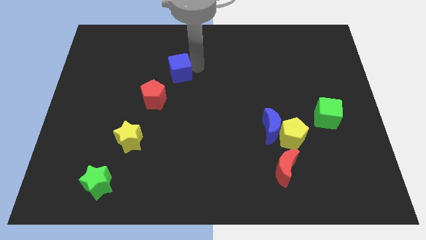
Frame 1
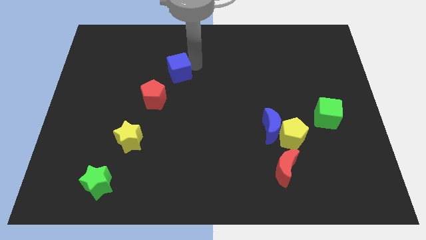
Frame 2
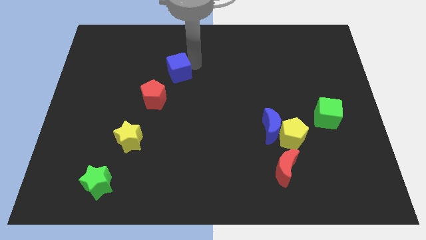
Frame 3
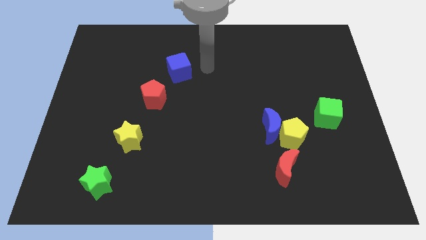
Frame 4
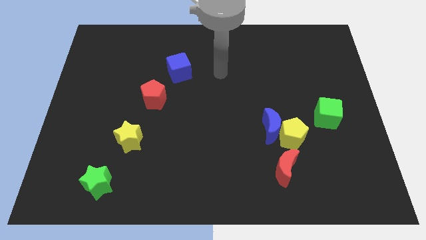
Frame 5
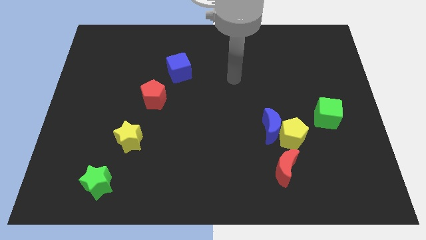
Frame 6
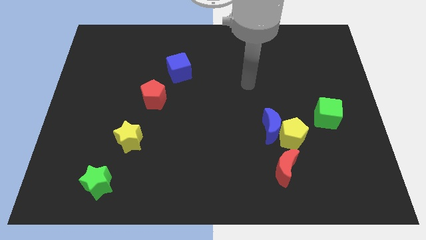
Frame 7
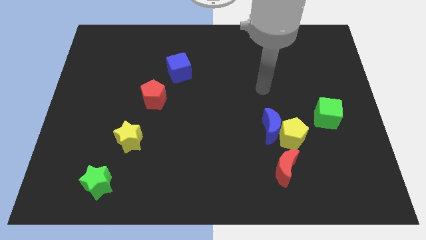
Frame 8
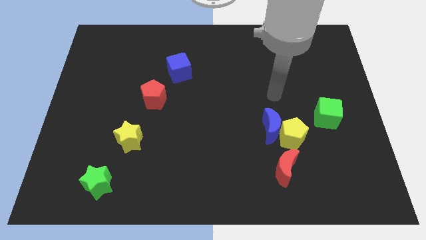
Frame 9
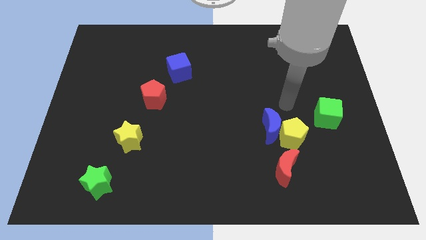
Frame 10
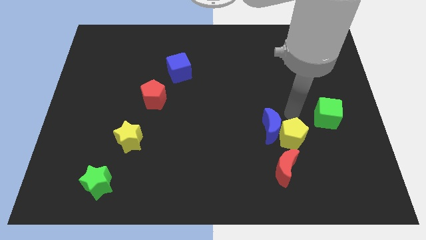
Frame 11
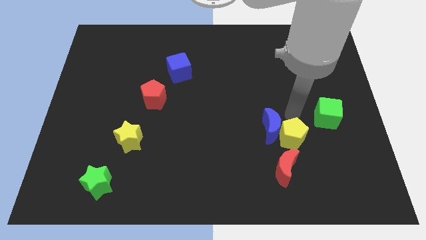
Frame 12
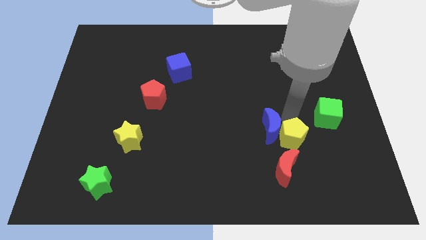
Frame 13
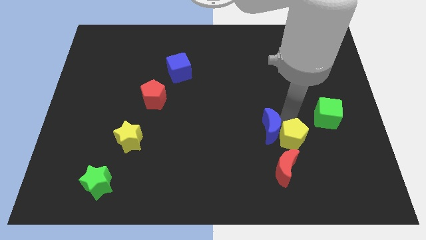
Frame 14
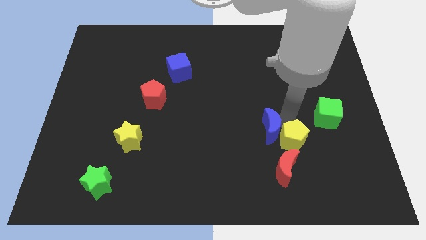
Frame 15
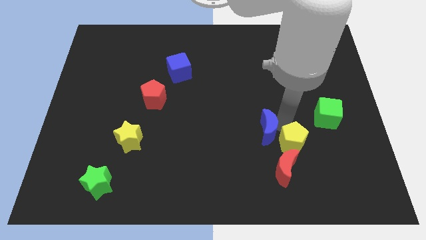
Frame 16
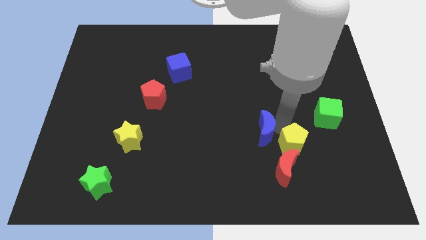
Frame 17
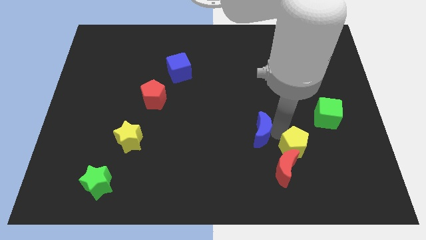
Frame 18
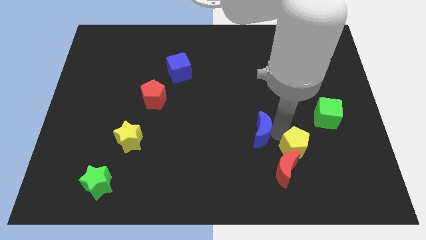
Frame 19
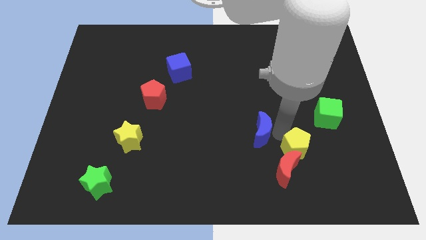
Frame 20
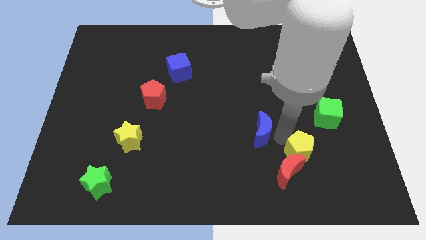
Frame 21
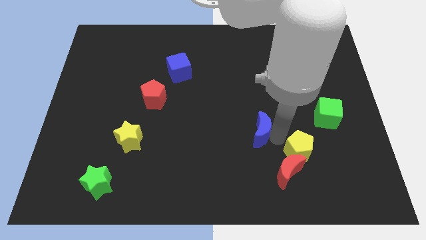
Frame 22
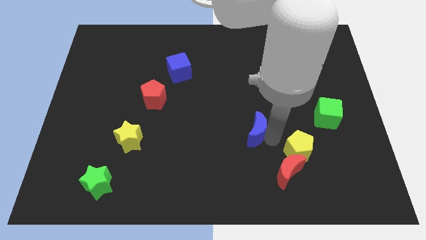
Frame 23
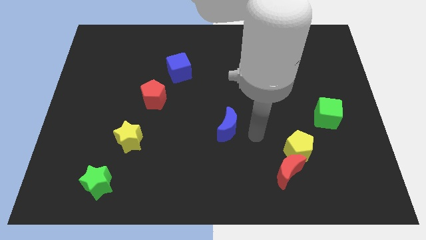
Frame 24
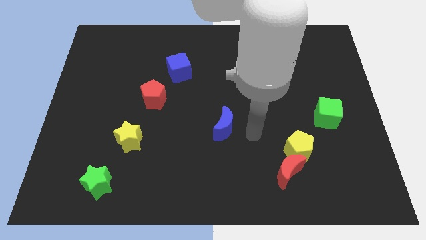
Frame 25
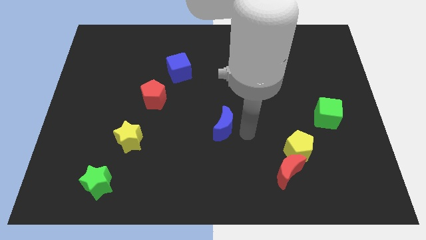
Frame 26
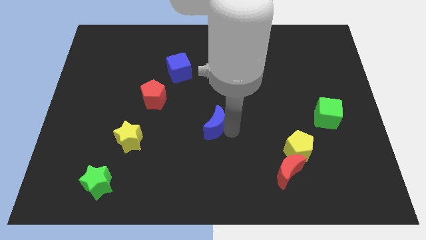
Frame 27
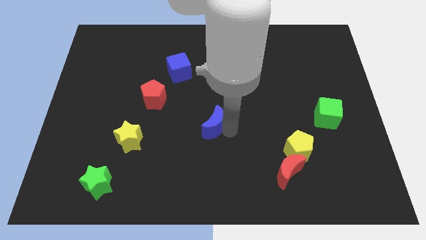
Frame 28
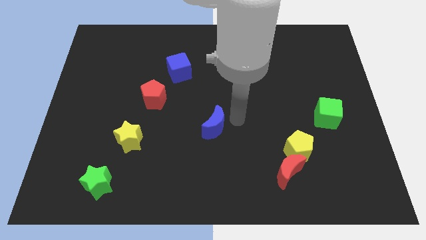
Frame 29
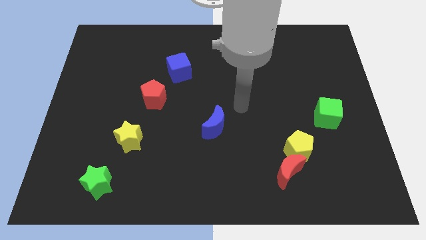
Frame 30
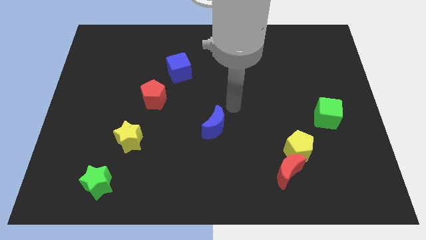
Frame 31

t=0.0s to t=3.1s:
separate the blue moon and yellow pentagon

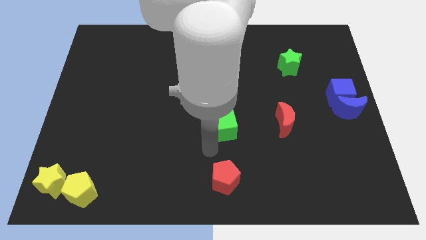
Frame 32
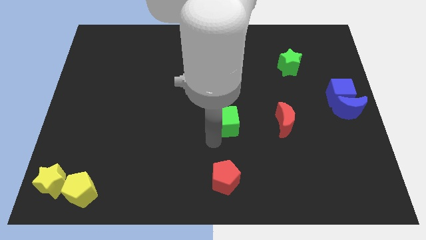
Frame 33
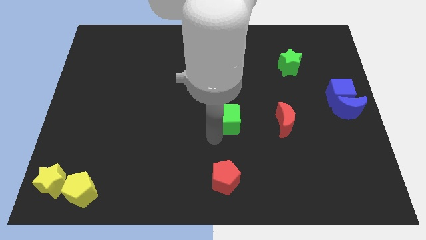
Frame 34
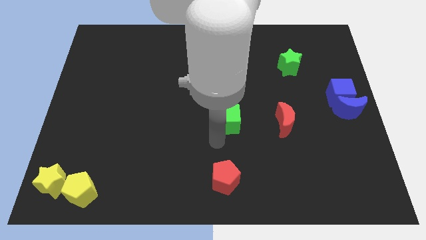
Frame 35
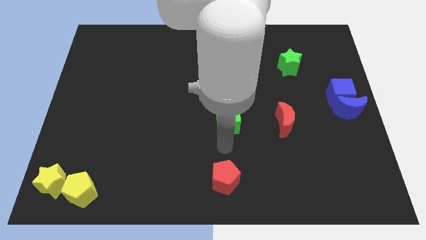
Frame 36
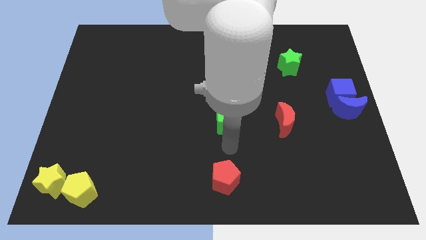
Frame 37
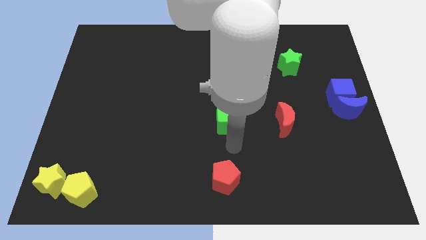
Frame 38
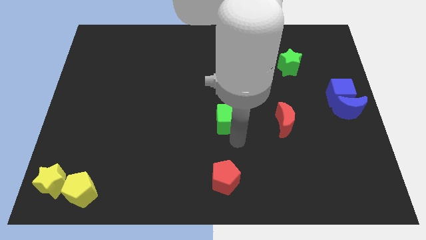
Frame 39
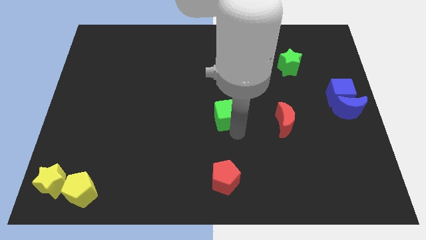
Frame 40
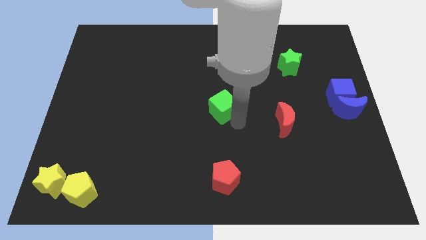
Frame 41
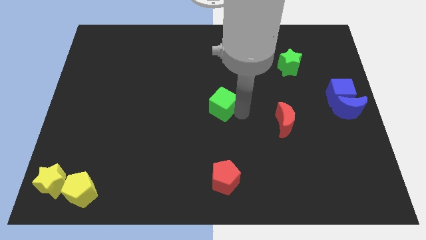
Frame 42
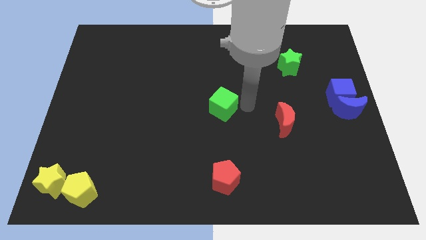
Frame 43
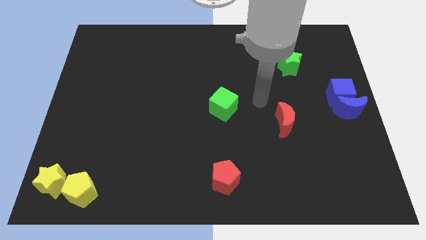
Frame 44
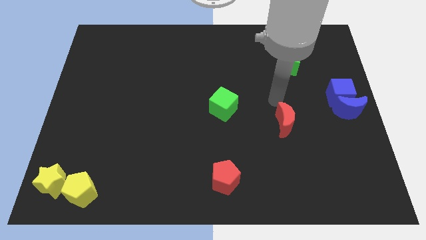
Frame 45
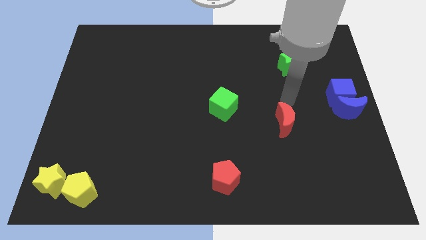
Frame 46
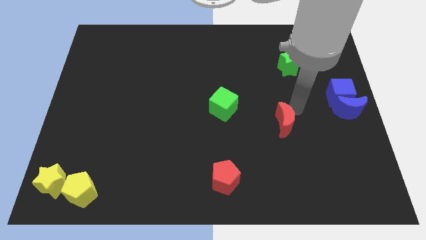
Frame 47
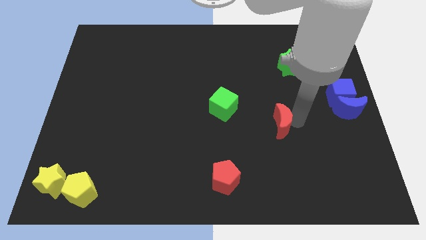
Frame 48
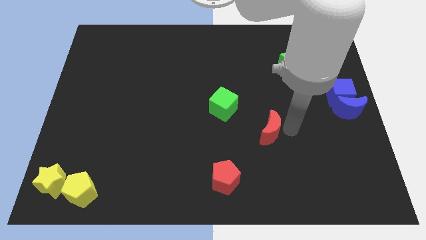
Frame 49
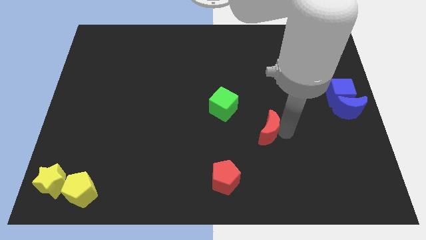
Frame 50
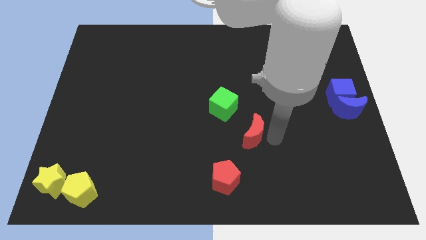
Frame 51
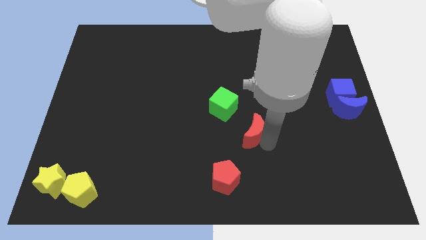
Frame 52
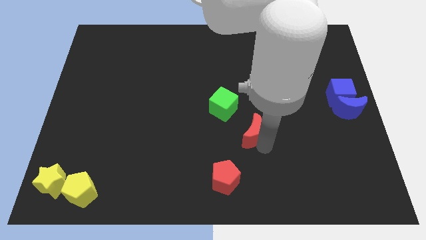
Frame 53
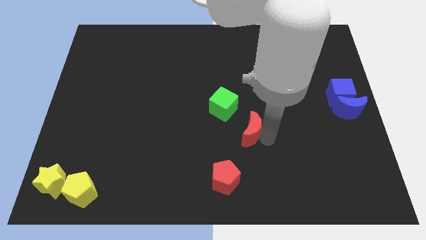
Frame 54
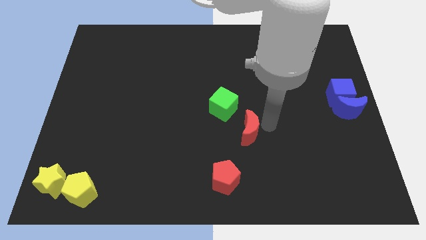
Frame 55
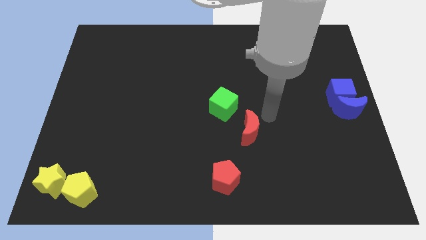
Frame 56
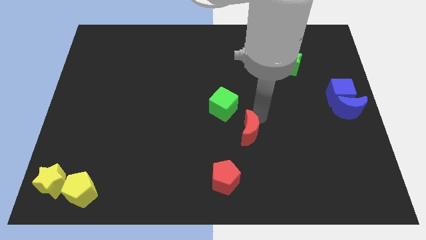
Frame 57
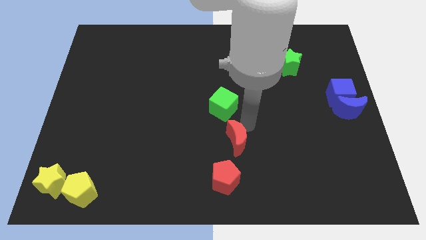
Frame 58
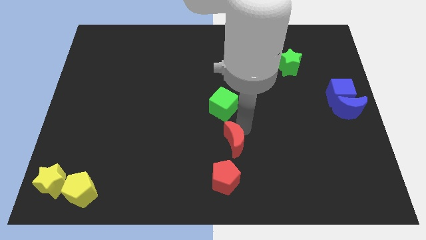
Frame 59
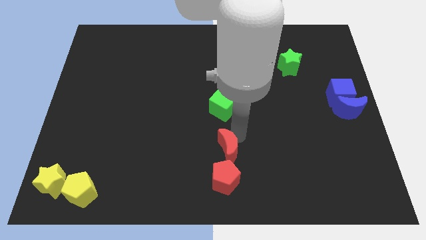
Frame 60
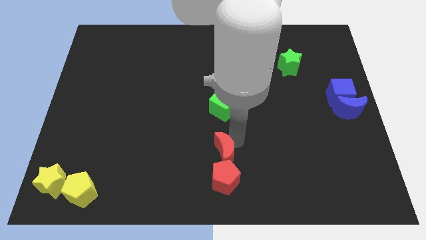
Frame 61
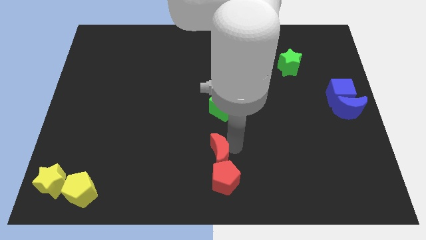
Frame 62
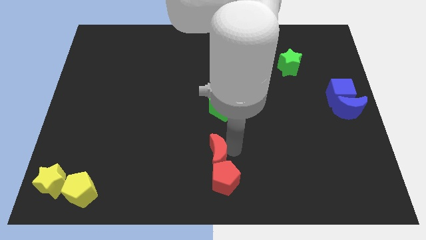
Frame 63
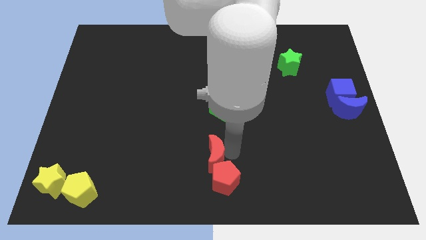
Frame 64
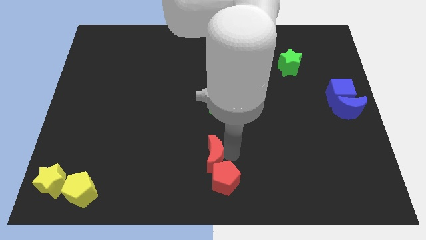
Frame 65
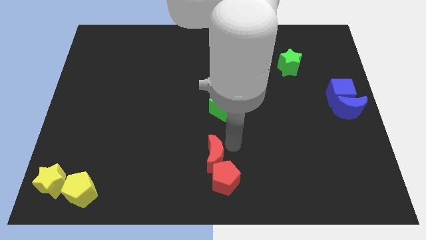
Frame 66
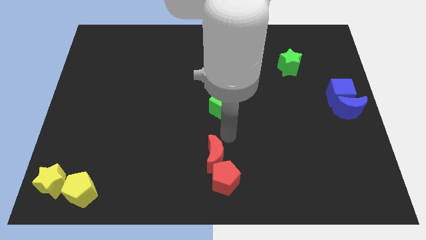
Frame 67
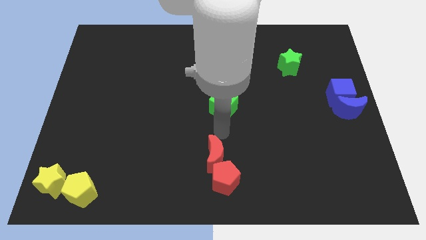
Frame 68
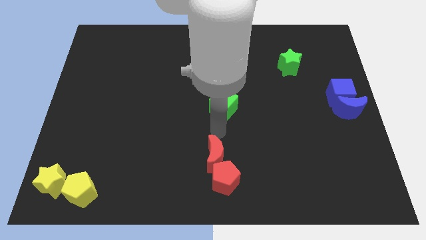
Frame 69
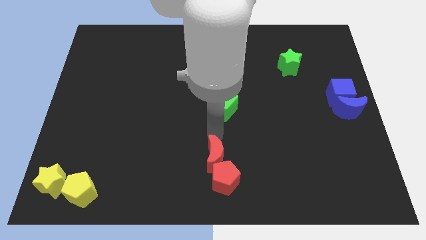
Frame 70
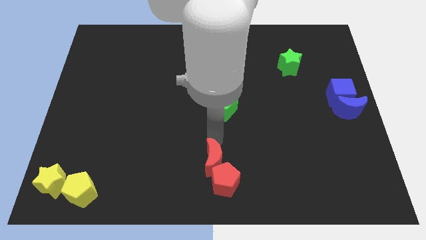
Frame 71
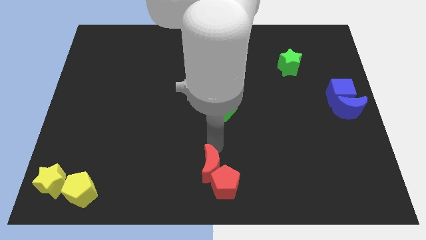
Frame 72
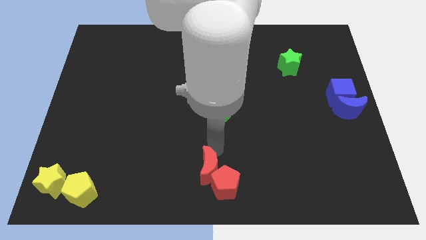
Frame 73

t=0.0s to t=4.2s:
move red moon close to red pentagon

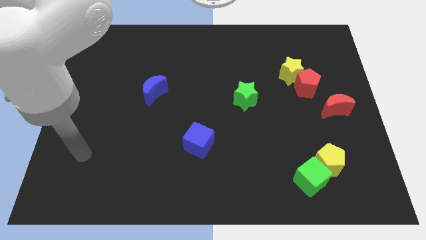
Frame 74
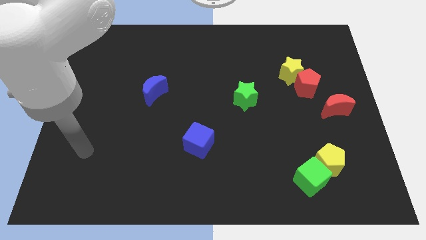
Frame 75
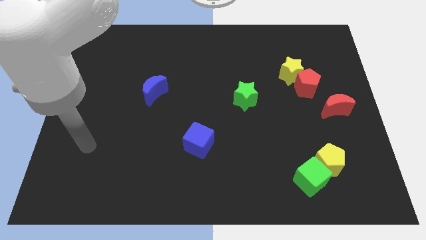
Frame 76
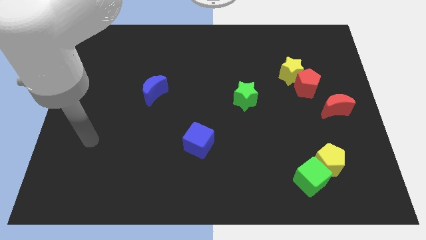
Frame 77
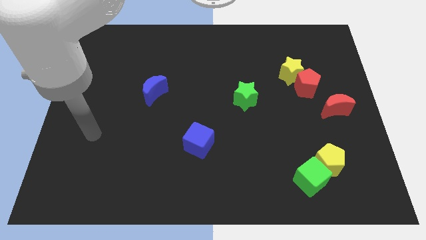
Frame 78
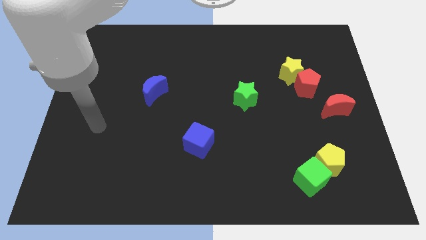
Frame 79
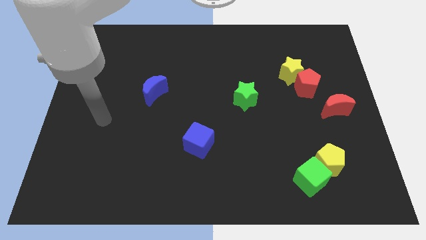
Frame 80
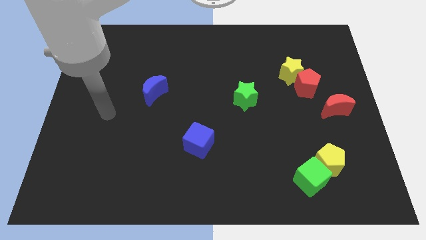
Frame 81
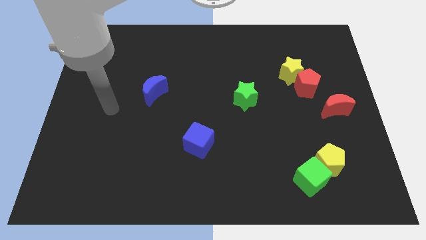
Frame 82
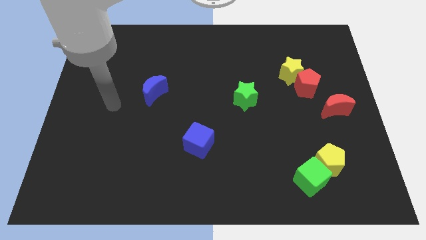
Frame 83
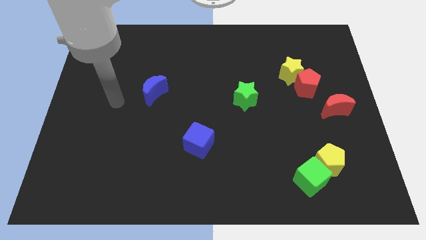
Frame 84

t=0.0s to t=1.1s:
move the arm to the left side of blue moon

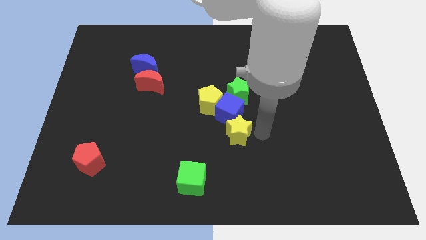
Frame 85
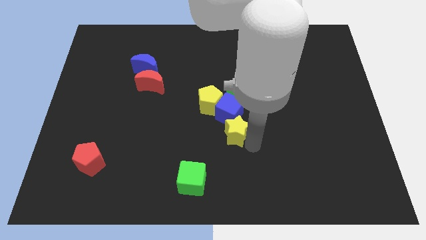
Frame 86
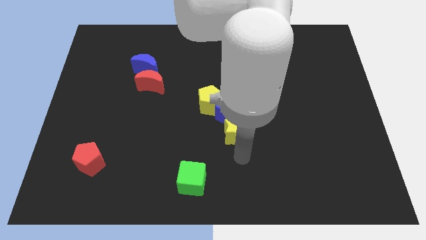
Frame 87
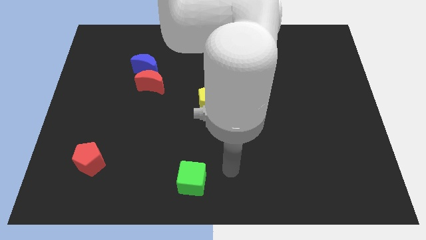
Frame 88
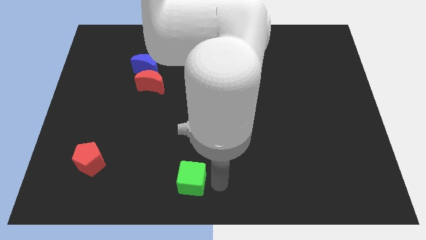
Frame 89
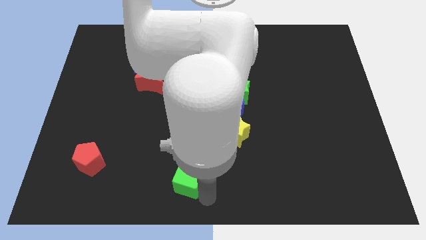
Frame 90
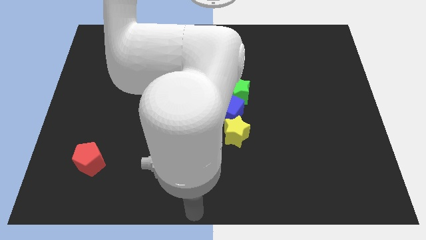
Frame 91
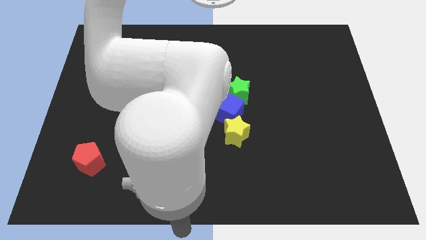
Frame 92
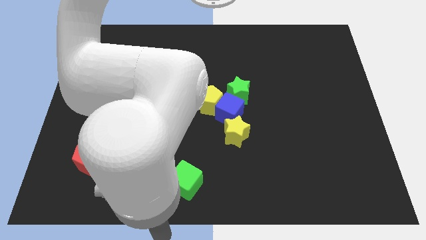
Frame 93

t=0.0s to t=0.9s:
move arm diagonally below the green cube
